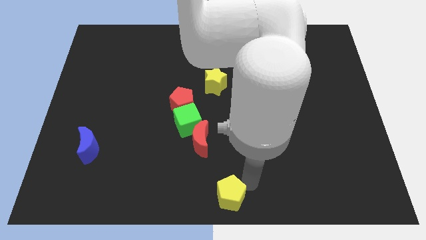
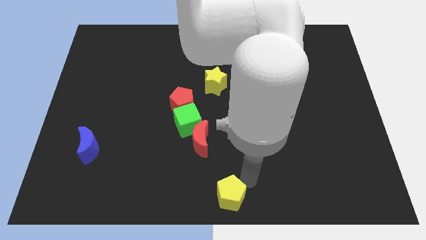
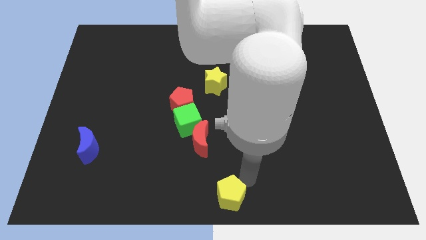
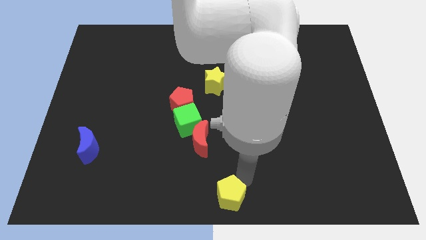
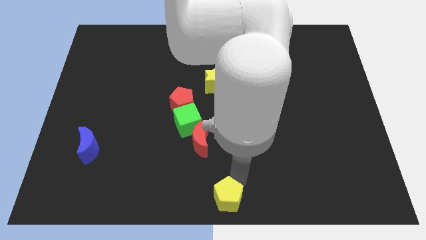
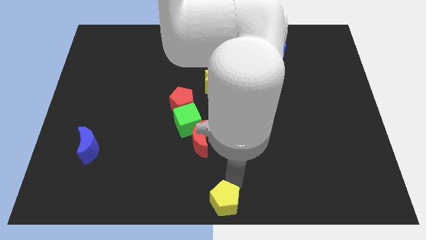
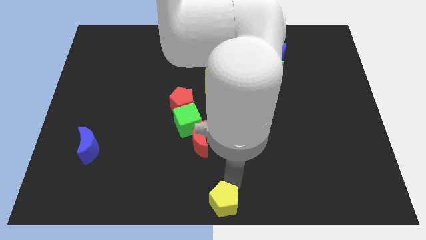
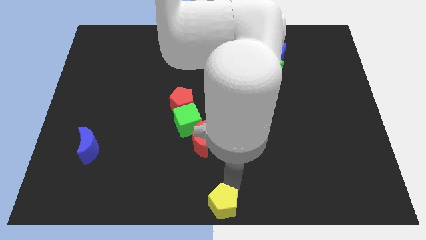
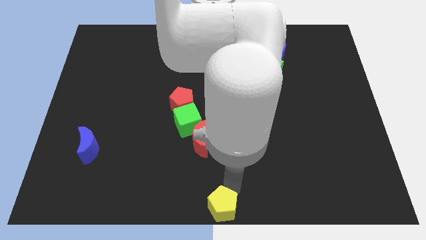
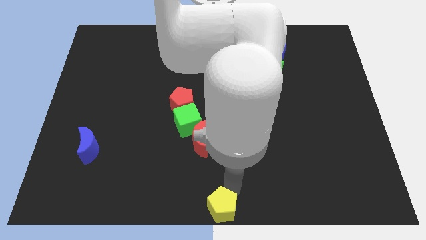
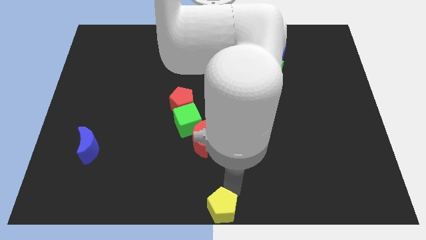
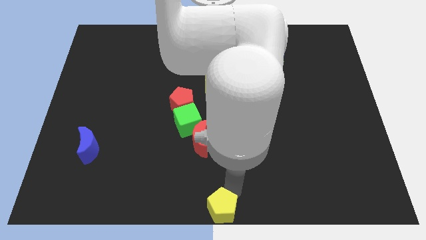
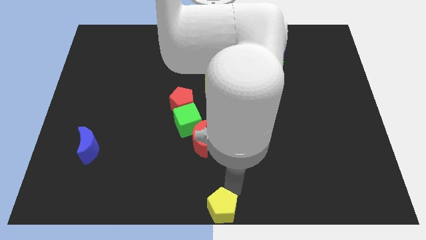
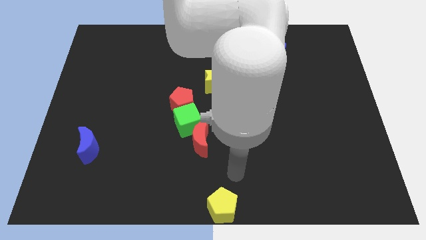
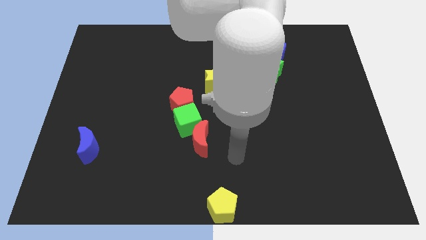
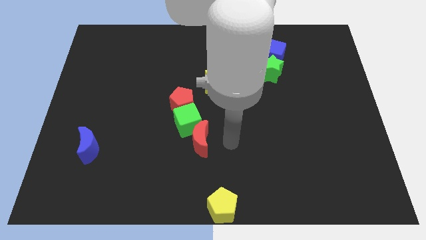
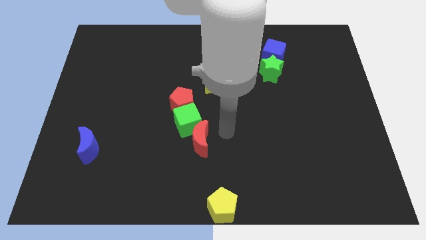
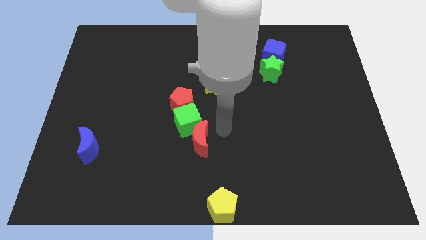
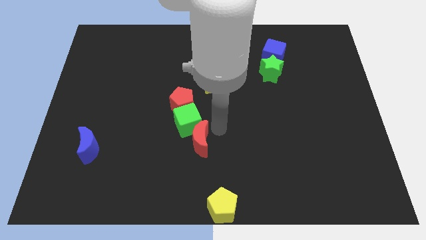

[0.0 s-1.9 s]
put the yellow pentagon vertically below the yellow star

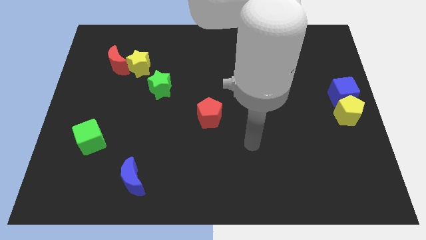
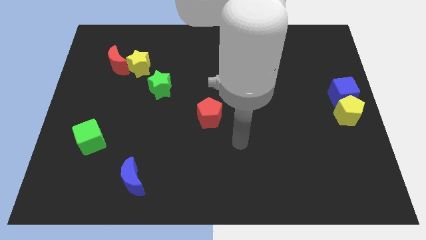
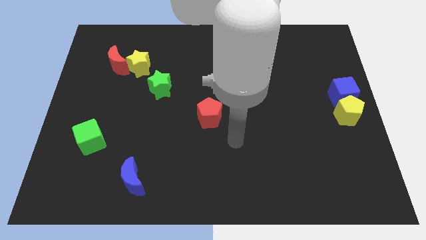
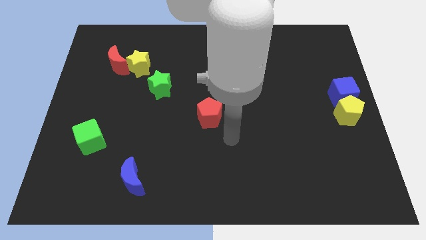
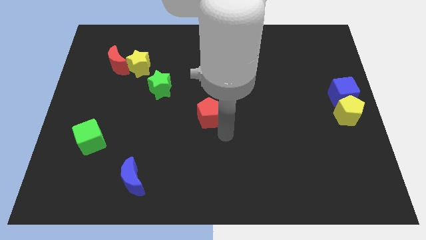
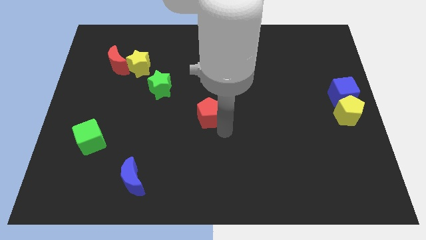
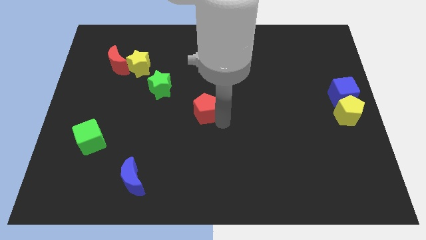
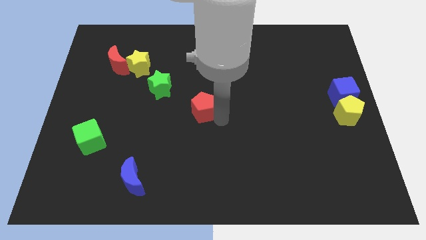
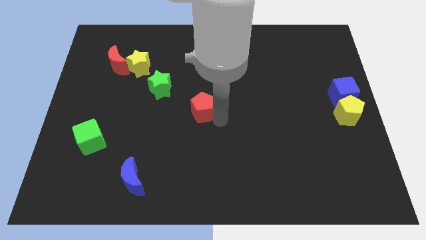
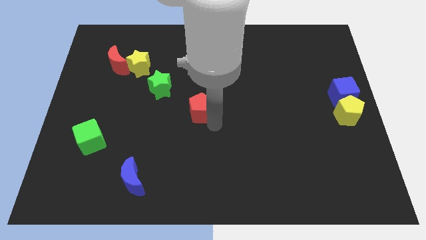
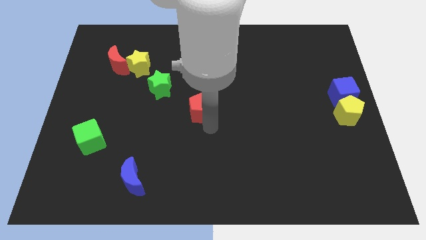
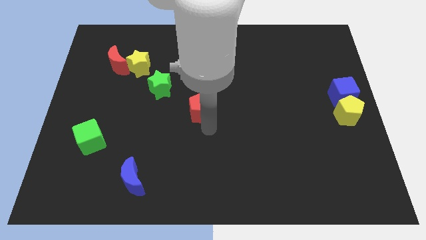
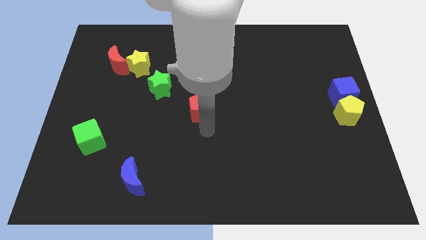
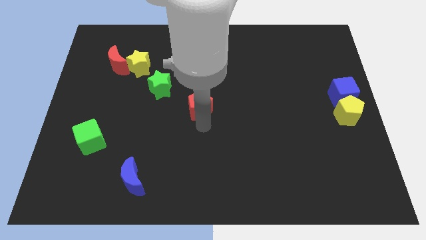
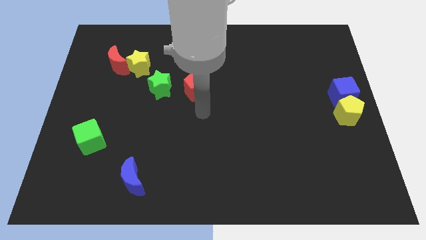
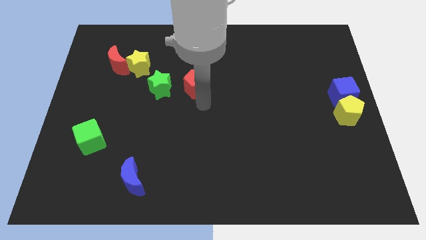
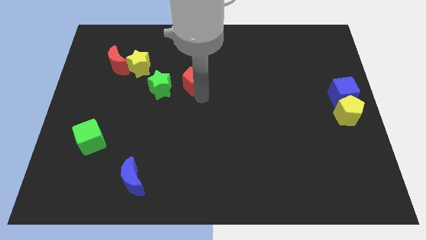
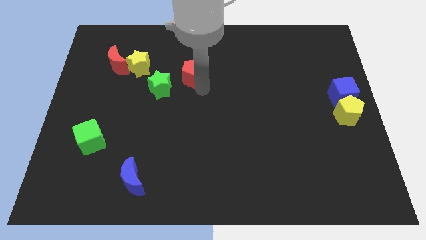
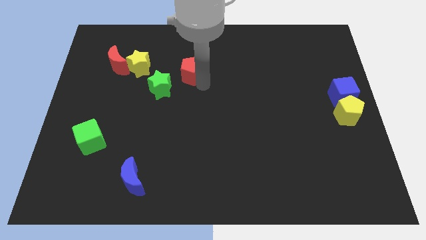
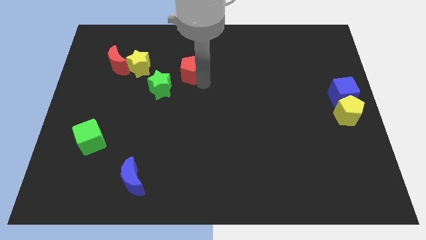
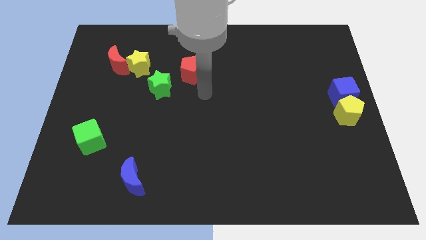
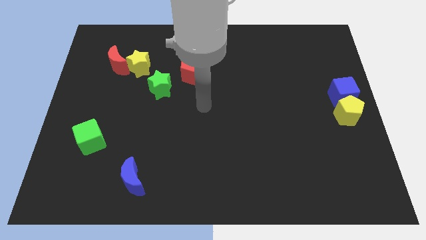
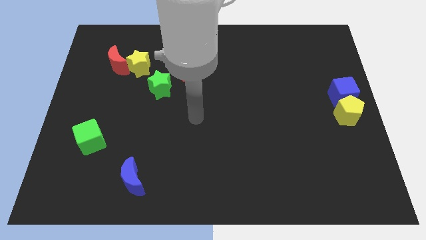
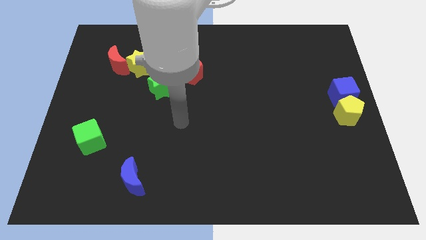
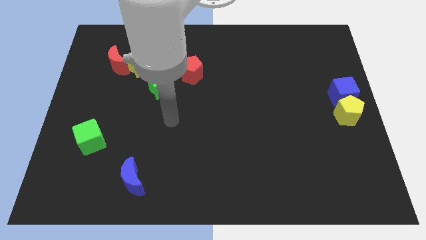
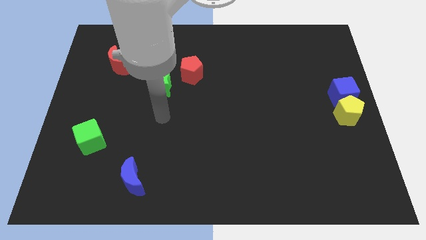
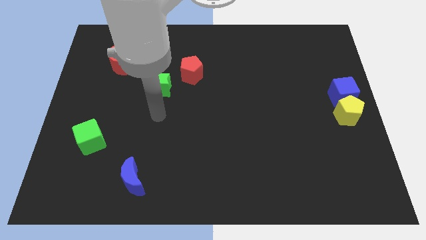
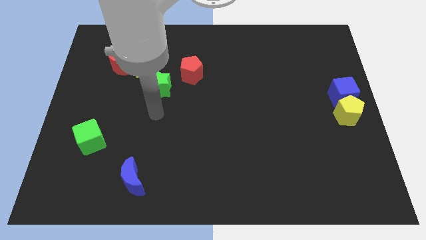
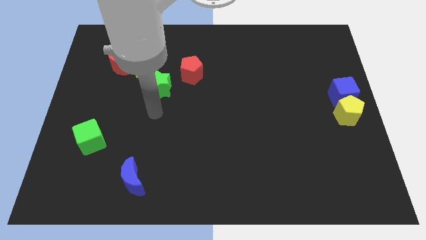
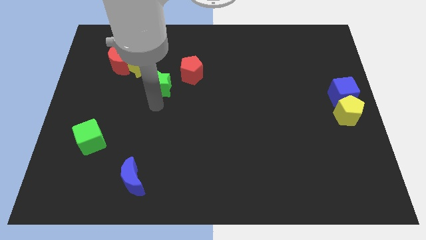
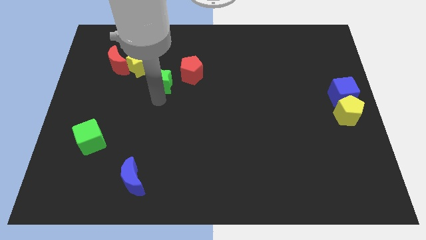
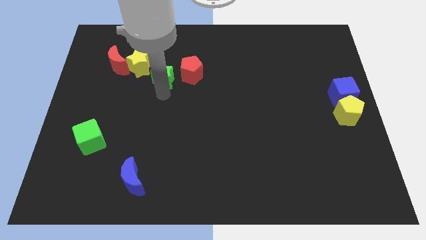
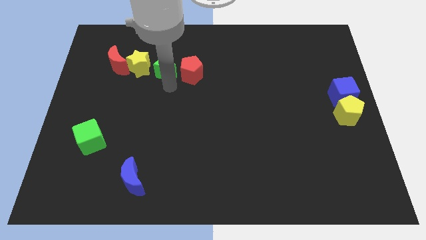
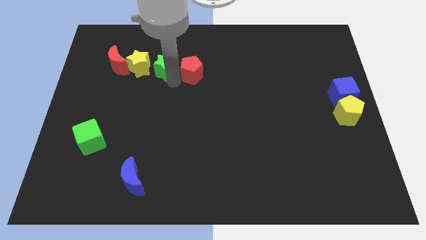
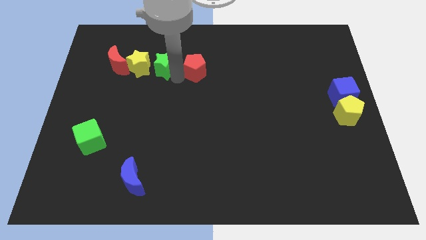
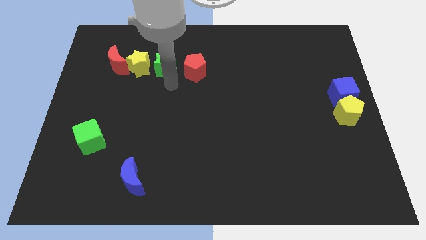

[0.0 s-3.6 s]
move the red pentagon and green star to the right side of the yellow star

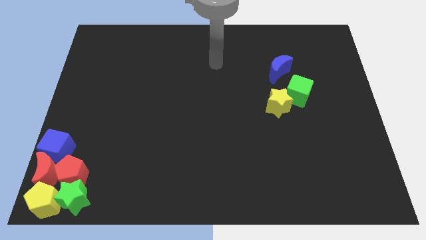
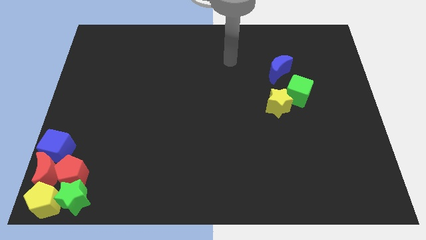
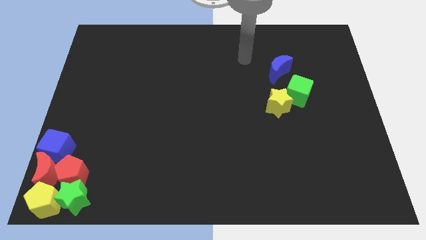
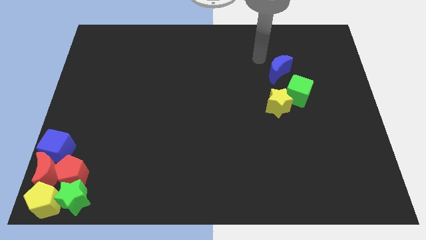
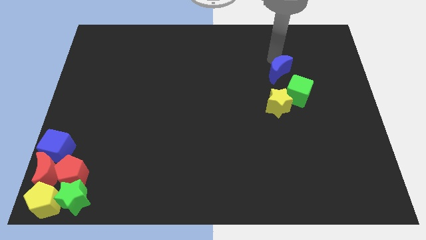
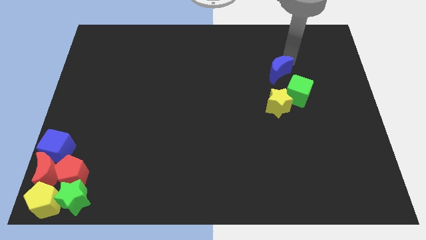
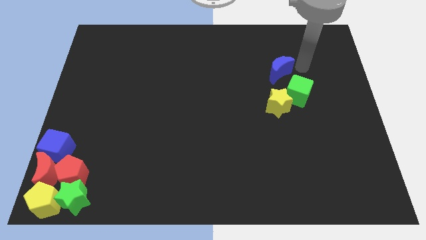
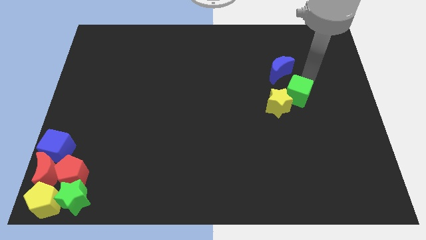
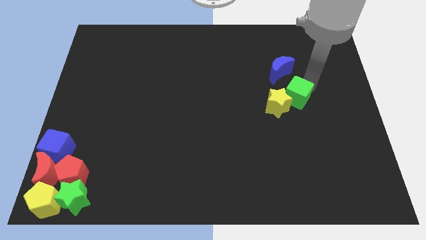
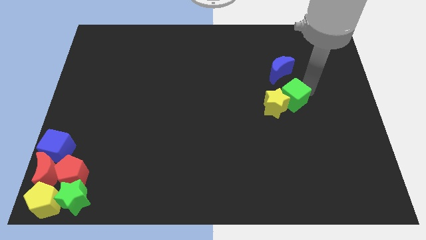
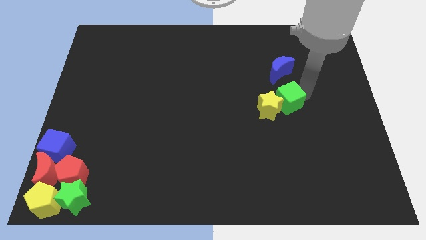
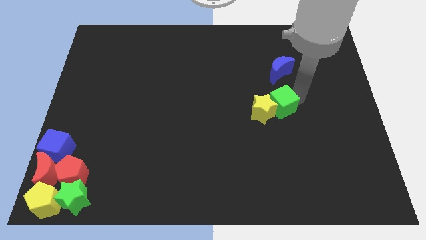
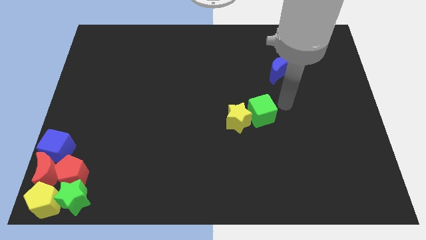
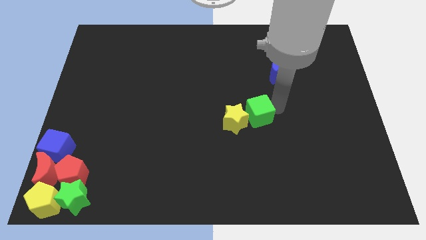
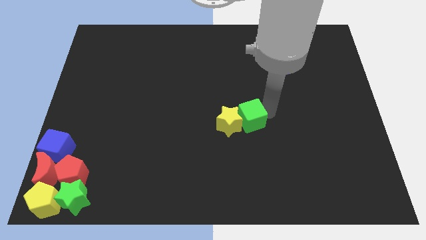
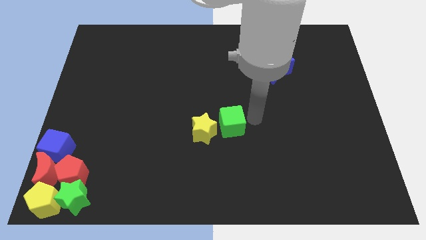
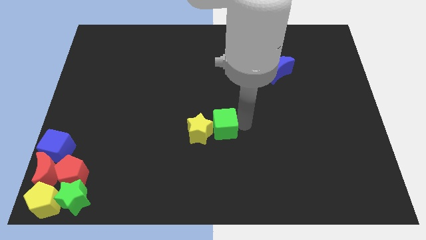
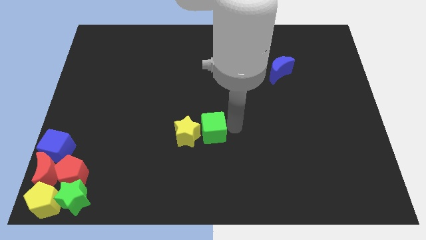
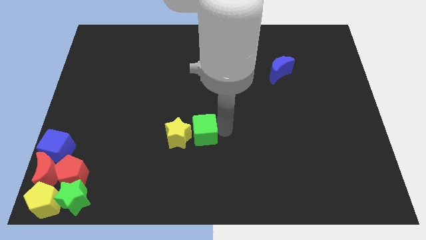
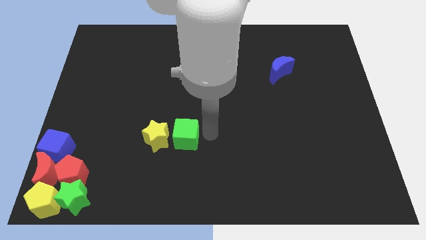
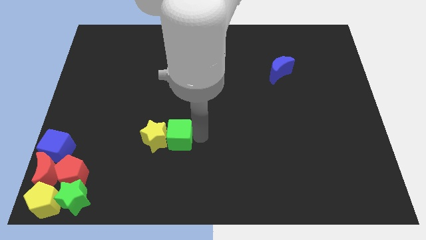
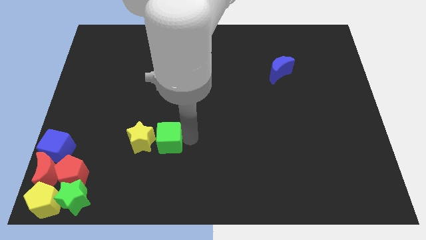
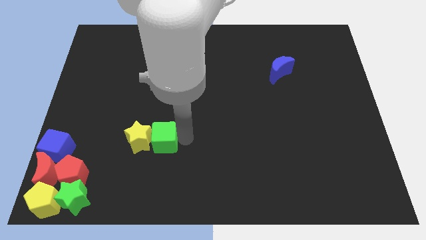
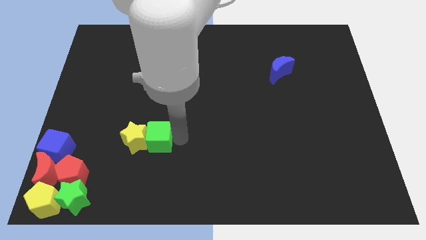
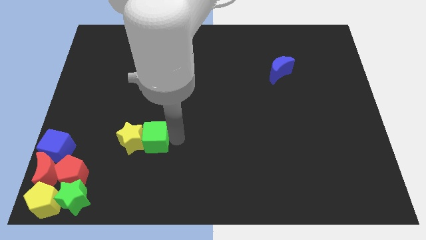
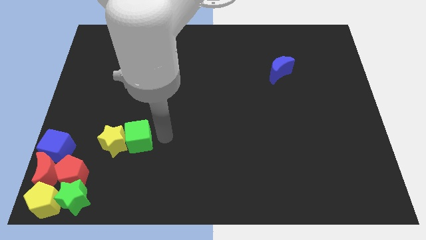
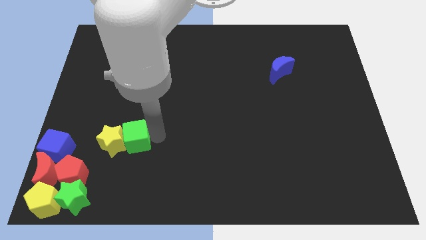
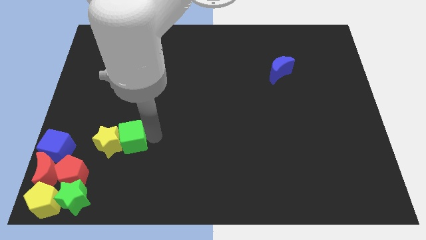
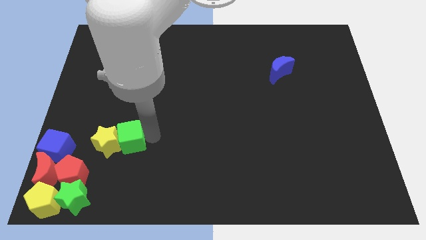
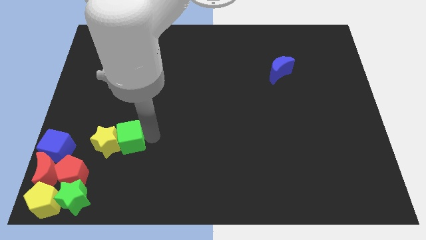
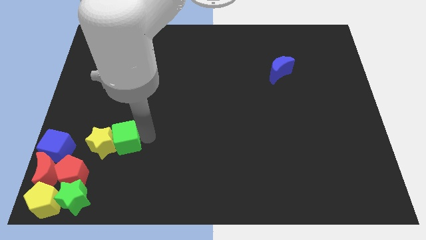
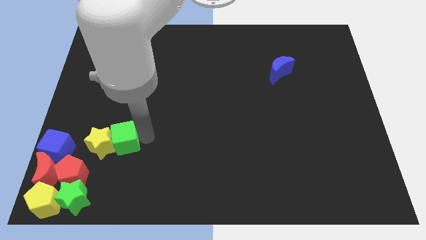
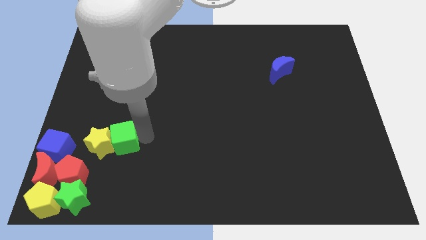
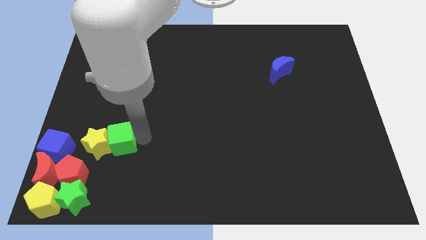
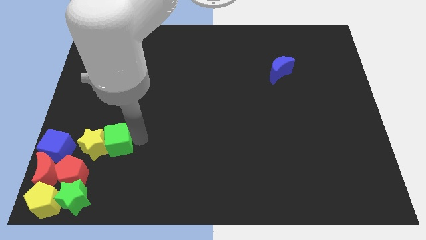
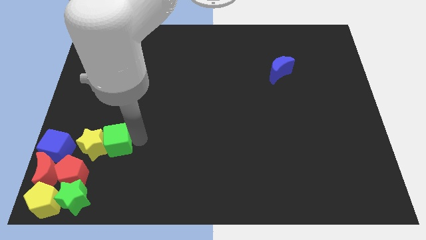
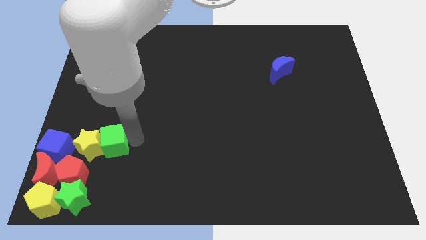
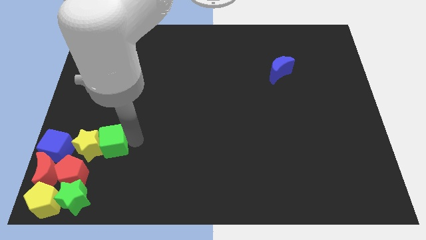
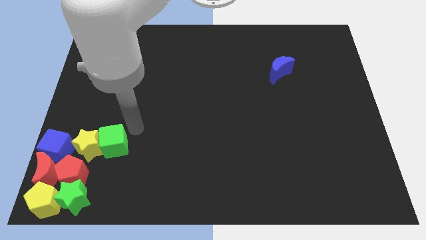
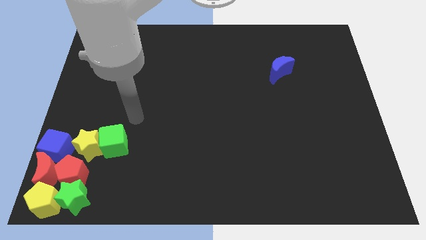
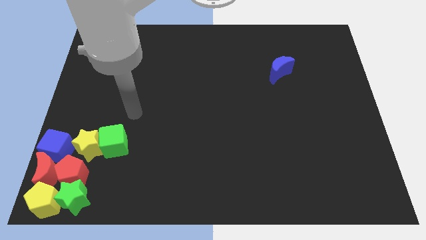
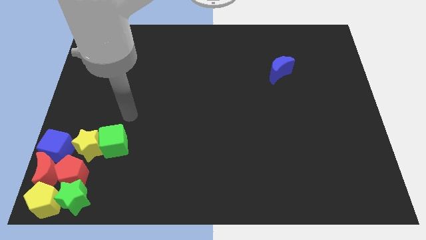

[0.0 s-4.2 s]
add yellow star and green cube right to the blue cube
